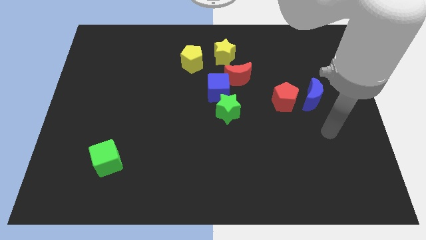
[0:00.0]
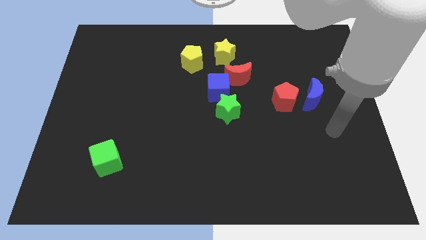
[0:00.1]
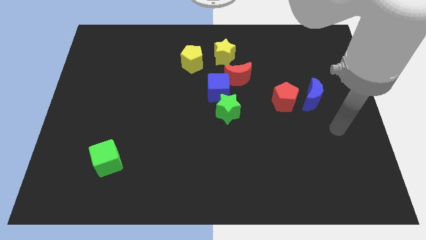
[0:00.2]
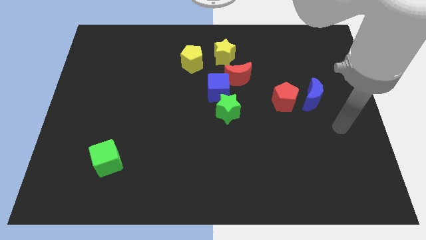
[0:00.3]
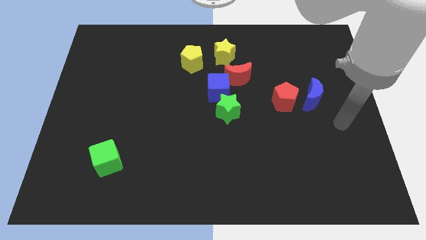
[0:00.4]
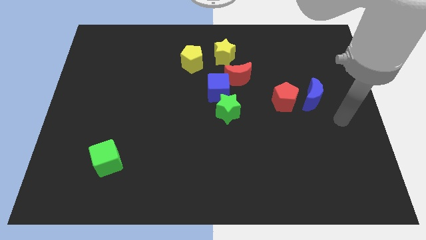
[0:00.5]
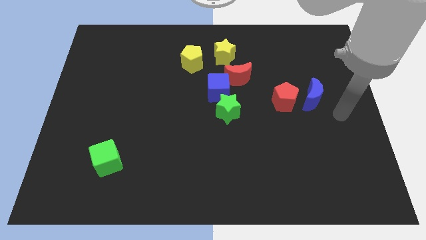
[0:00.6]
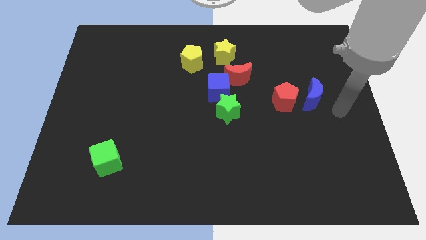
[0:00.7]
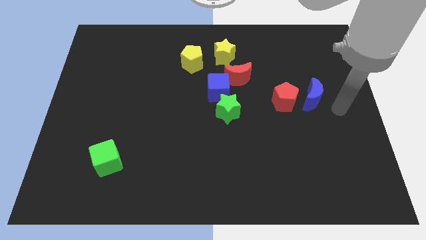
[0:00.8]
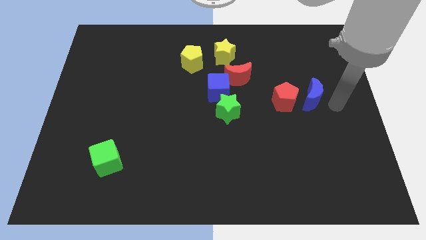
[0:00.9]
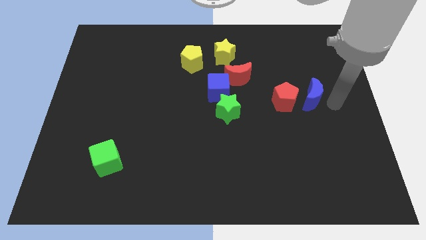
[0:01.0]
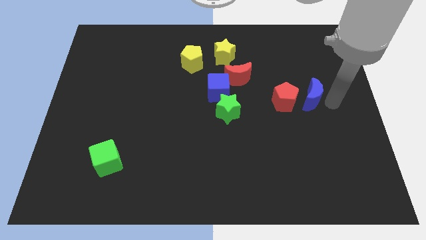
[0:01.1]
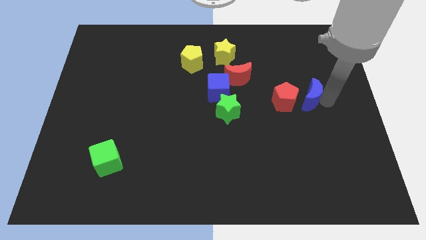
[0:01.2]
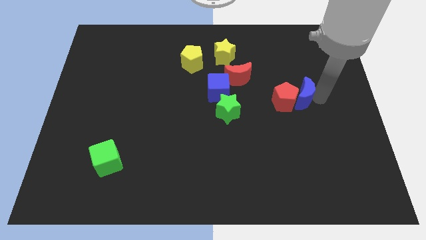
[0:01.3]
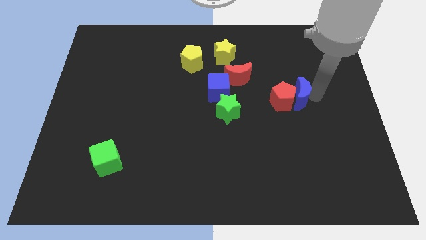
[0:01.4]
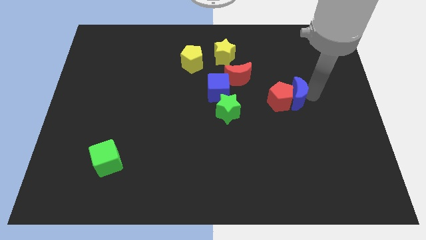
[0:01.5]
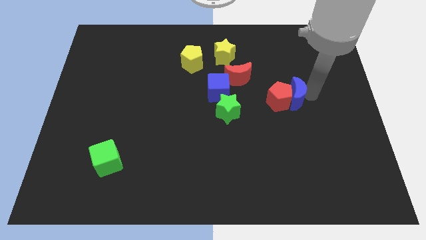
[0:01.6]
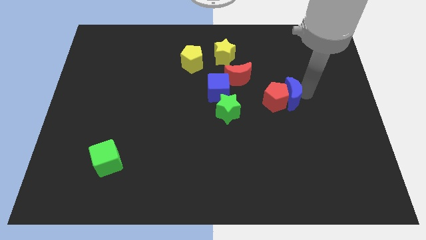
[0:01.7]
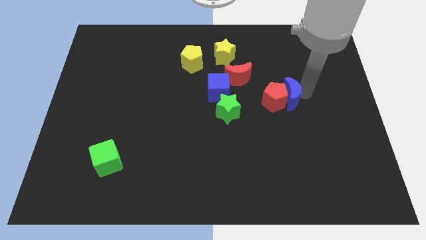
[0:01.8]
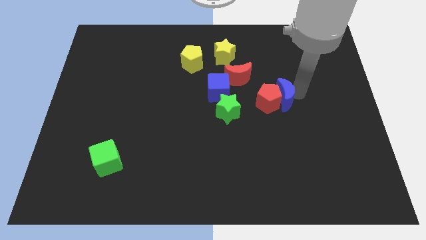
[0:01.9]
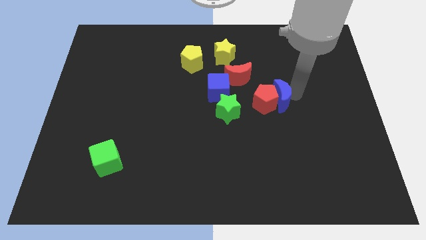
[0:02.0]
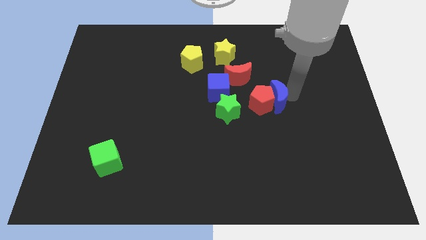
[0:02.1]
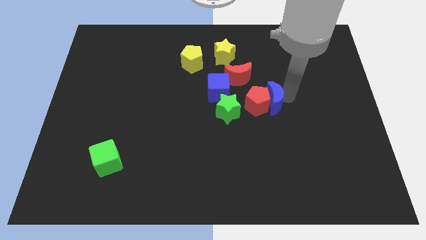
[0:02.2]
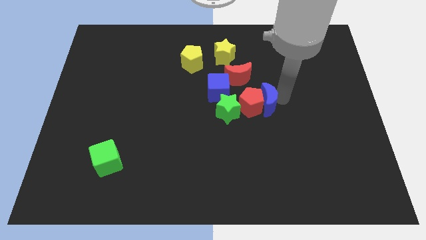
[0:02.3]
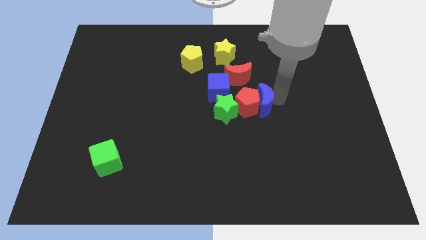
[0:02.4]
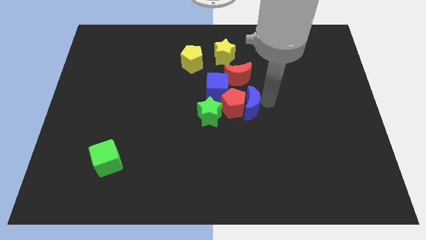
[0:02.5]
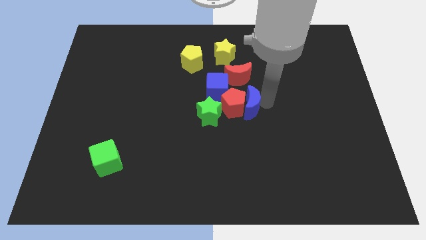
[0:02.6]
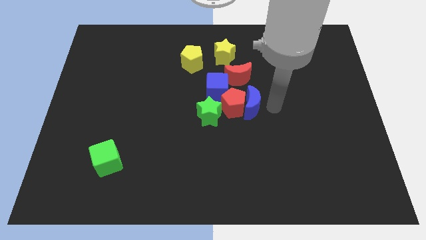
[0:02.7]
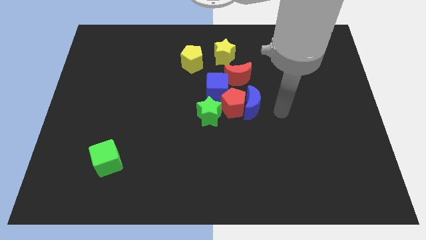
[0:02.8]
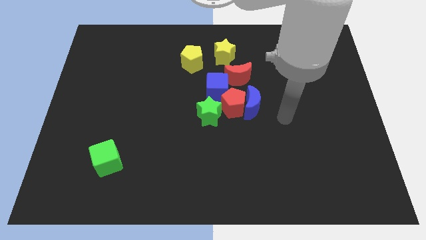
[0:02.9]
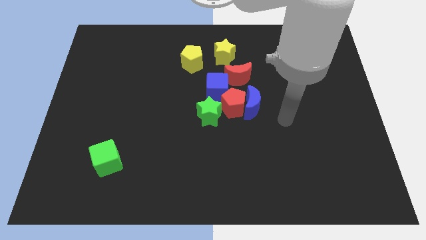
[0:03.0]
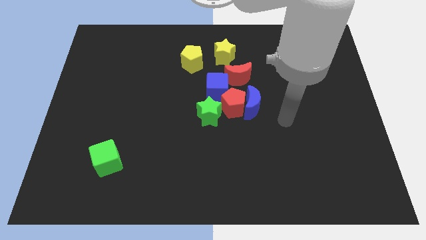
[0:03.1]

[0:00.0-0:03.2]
place blue moon to the bottom right of red moon

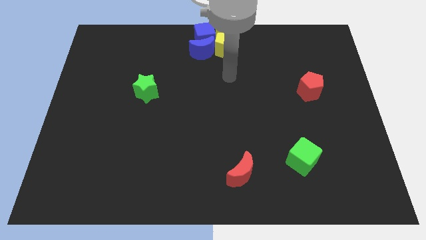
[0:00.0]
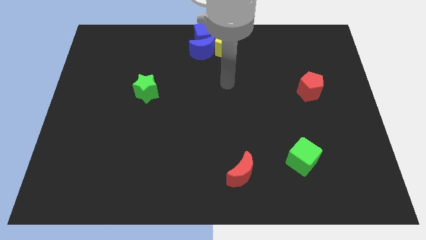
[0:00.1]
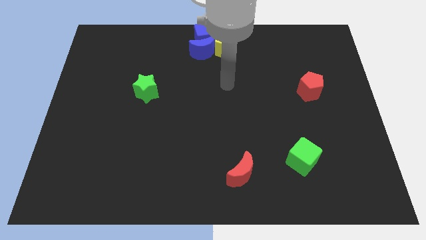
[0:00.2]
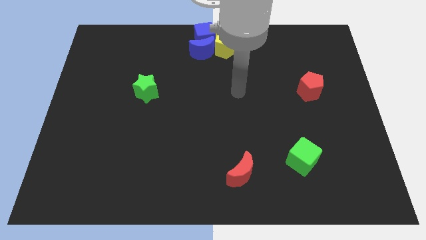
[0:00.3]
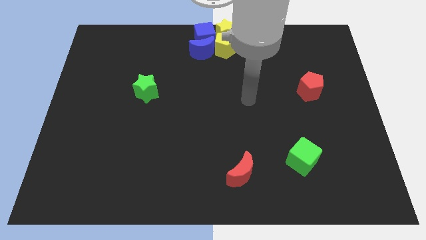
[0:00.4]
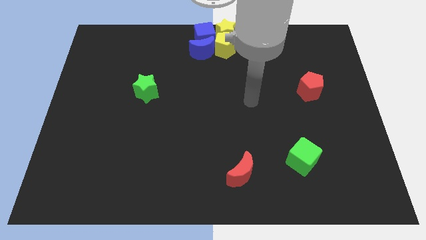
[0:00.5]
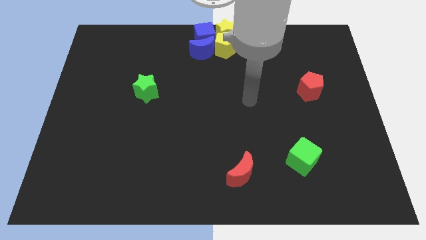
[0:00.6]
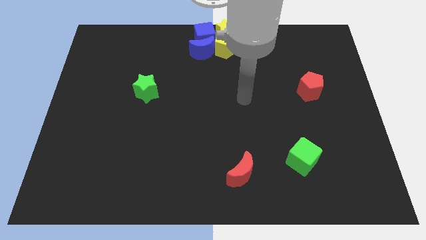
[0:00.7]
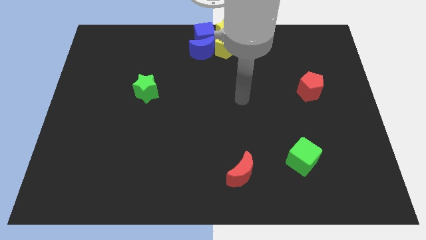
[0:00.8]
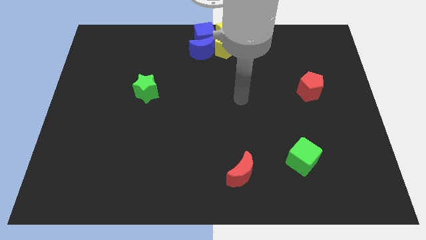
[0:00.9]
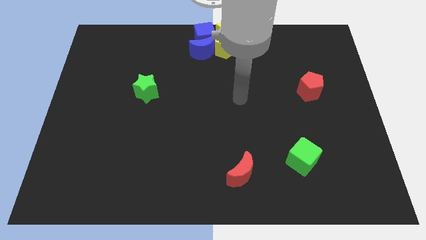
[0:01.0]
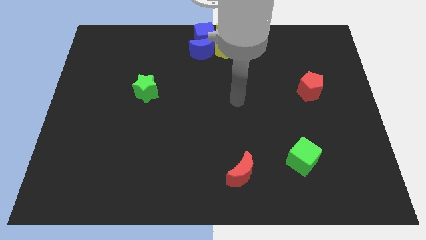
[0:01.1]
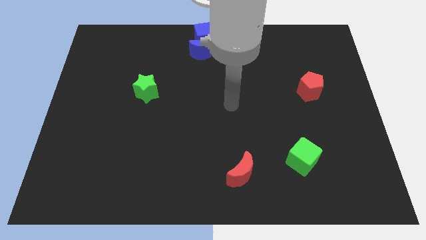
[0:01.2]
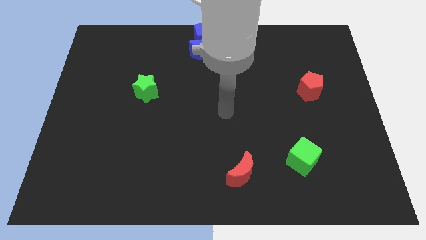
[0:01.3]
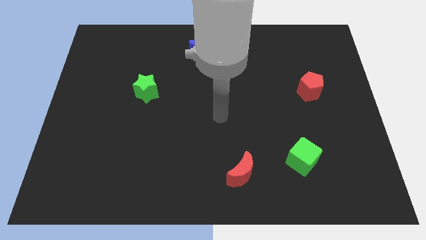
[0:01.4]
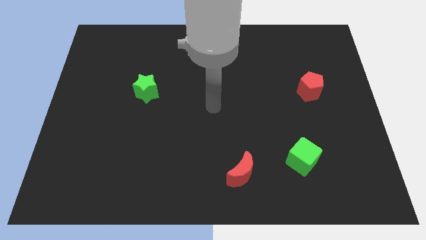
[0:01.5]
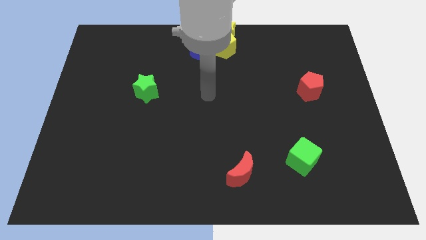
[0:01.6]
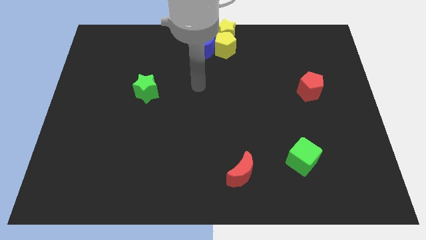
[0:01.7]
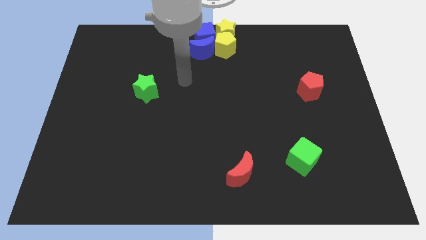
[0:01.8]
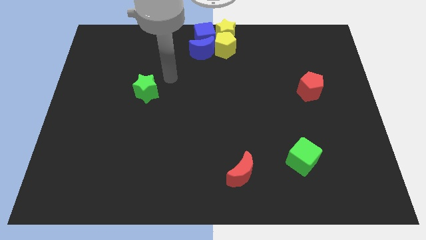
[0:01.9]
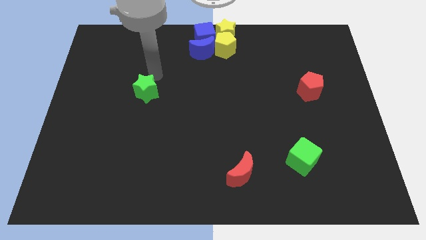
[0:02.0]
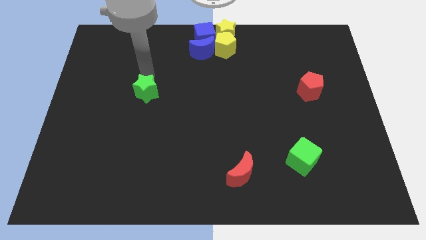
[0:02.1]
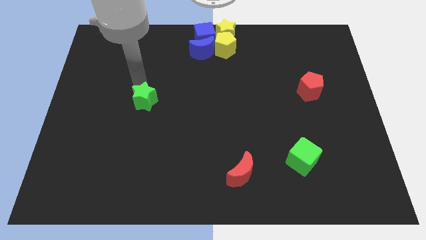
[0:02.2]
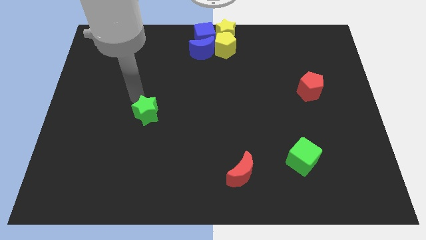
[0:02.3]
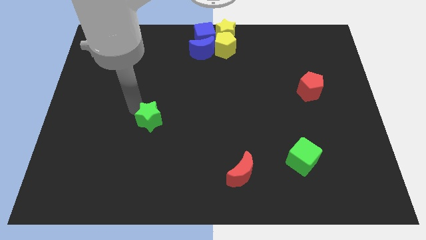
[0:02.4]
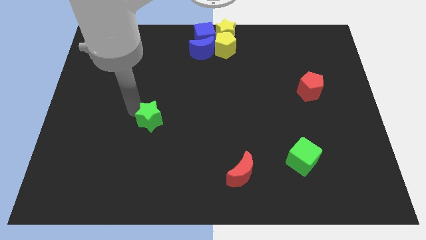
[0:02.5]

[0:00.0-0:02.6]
push the green star towards down

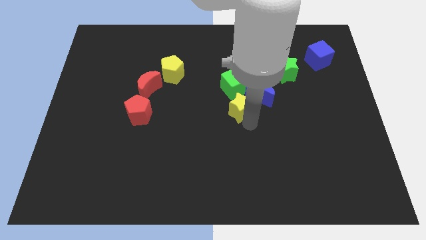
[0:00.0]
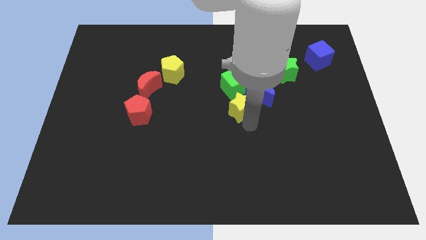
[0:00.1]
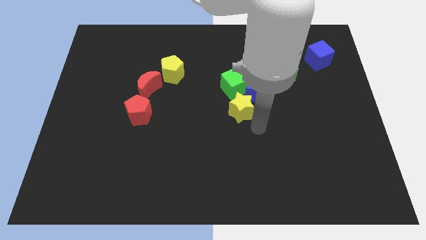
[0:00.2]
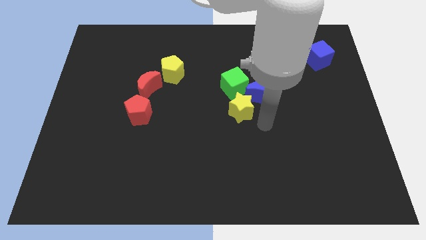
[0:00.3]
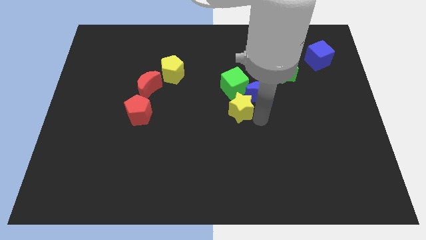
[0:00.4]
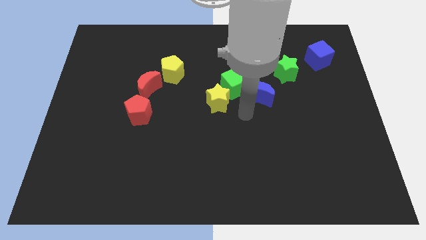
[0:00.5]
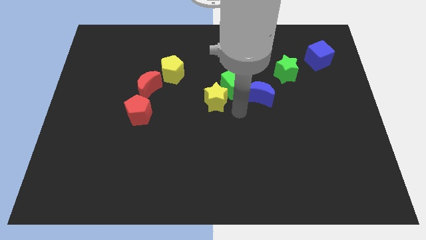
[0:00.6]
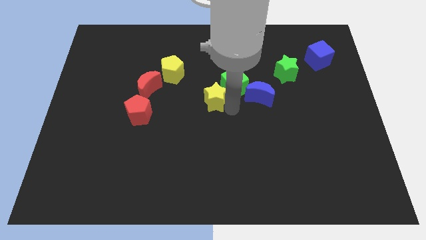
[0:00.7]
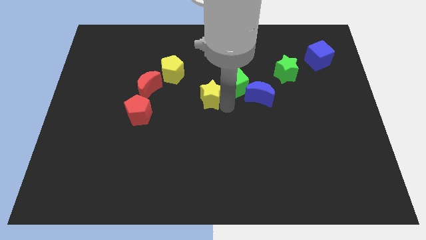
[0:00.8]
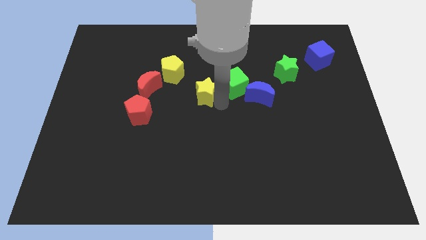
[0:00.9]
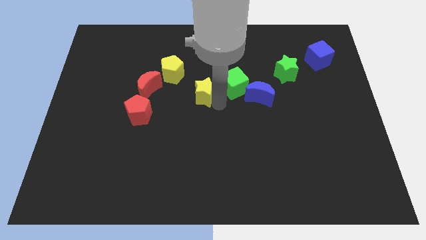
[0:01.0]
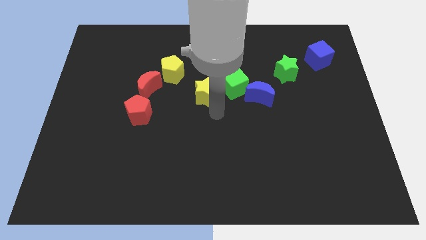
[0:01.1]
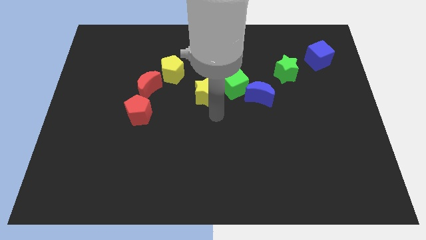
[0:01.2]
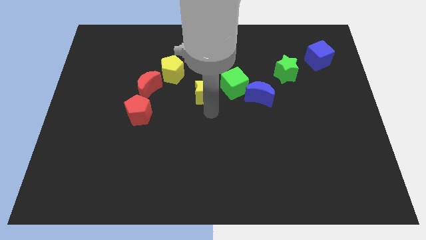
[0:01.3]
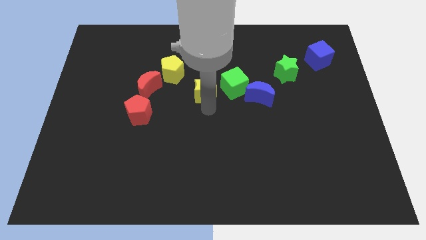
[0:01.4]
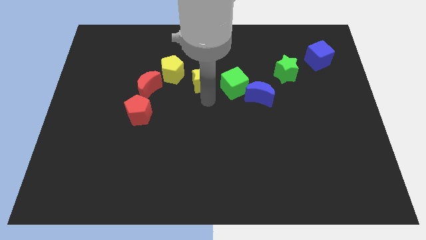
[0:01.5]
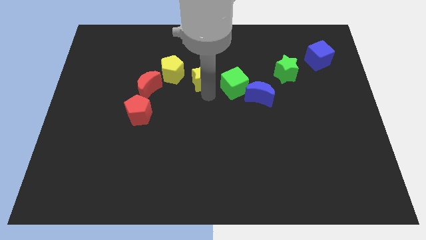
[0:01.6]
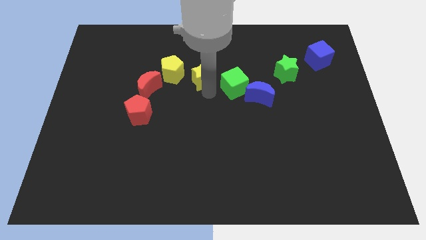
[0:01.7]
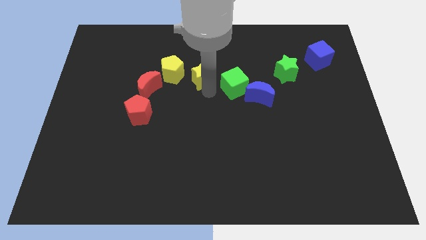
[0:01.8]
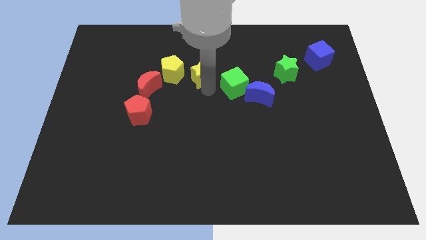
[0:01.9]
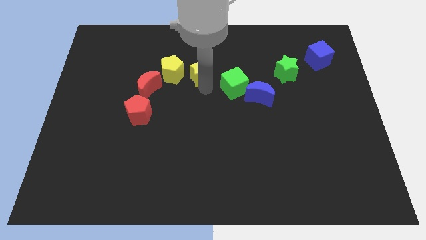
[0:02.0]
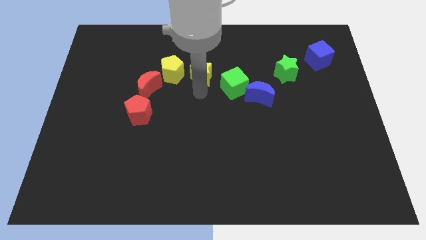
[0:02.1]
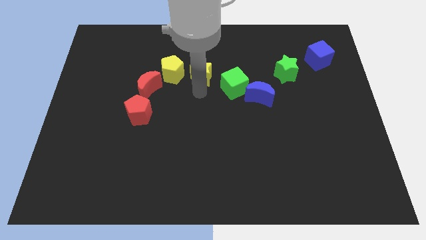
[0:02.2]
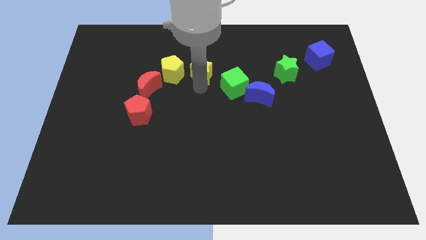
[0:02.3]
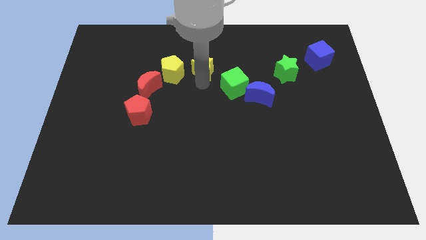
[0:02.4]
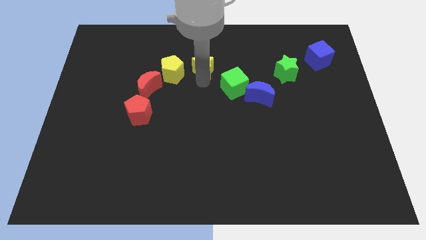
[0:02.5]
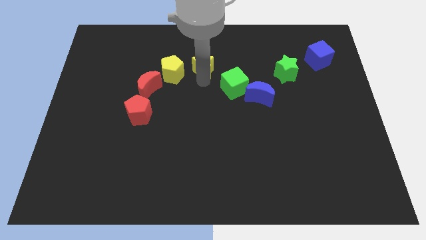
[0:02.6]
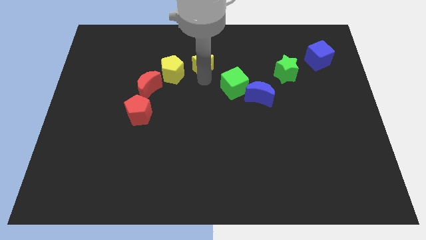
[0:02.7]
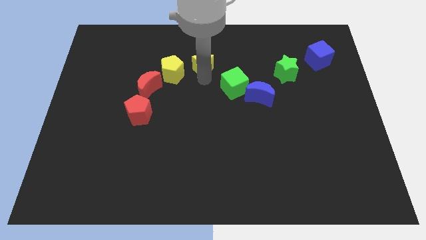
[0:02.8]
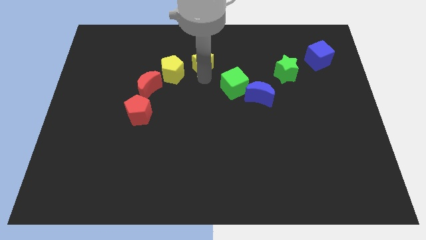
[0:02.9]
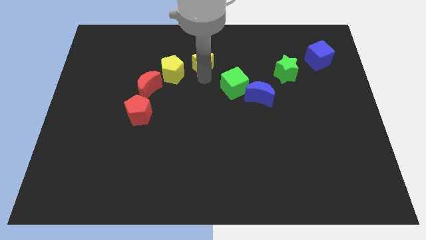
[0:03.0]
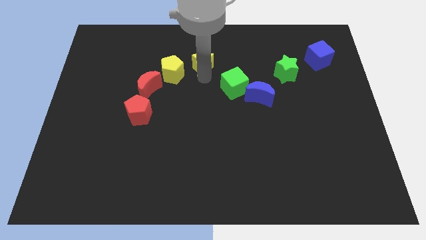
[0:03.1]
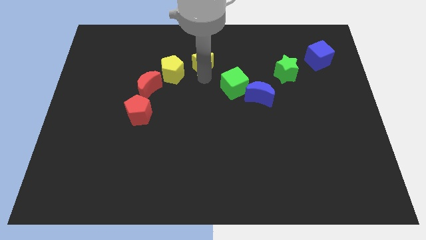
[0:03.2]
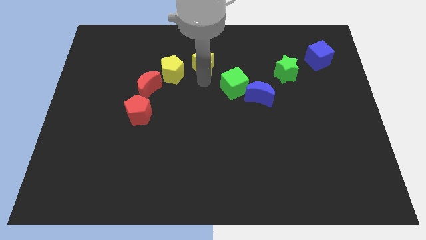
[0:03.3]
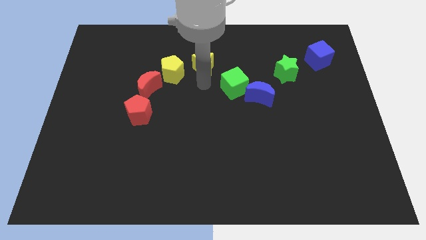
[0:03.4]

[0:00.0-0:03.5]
push the yellow star at the right side of the yellow pentagon
